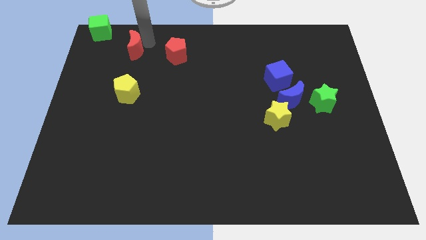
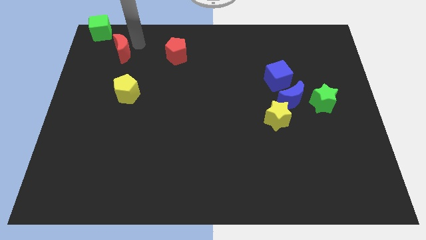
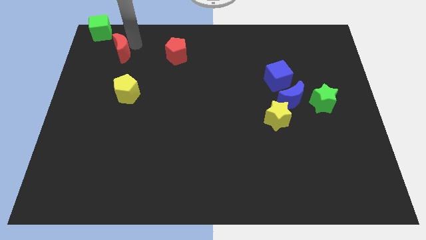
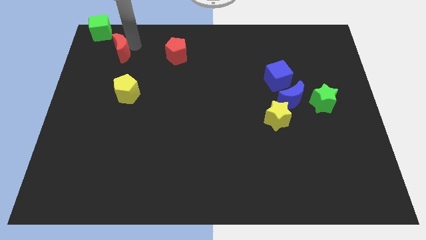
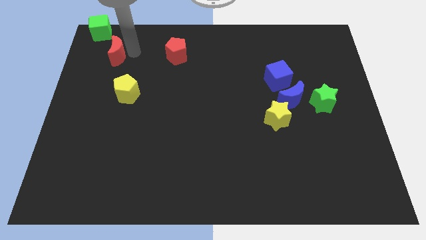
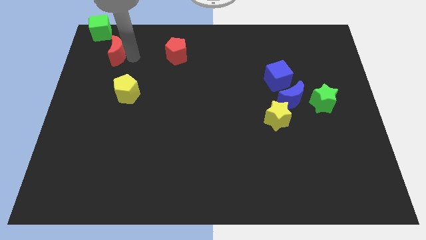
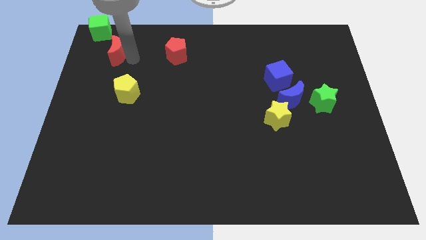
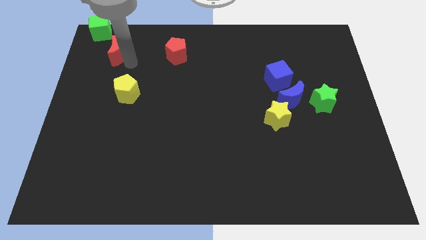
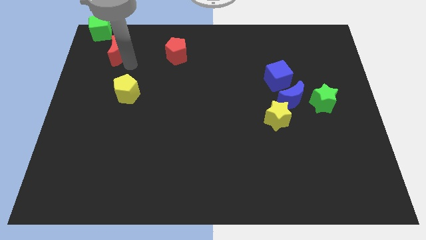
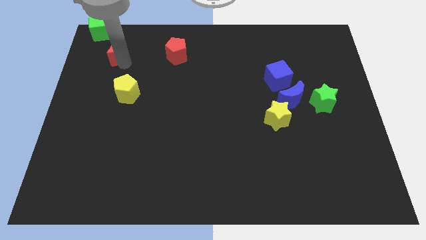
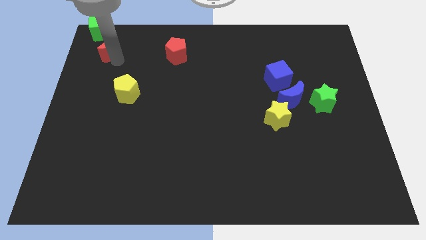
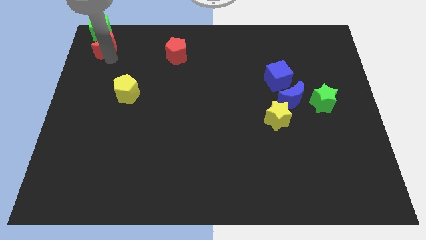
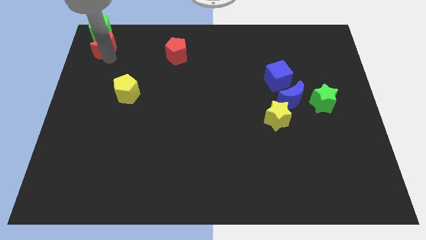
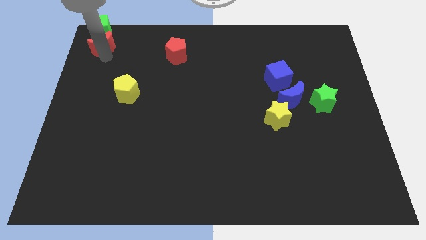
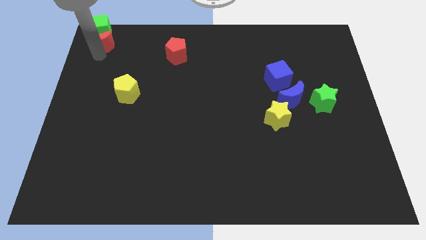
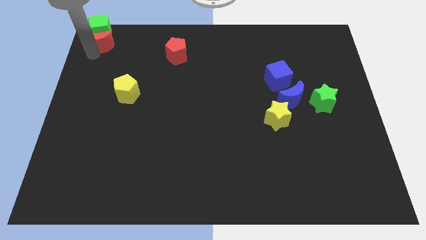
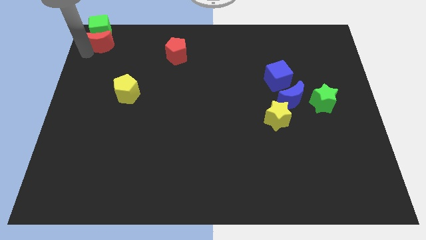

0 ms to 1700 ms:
place the red blocks at the top center

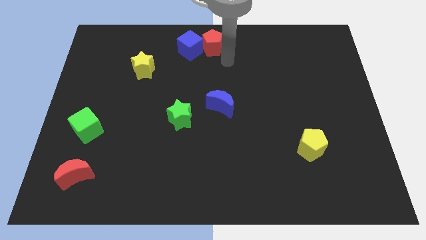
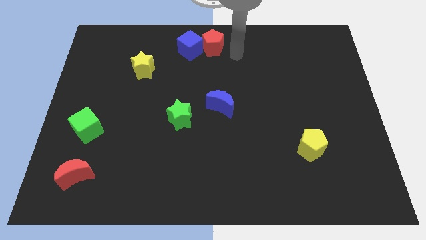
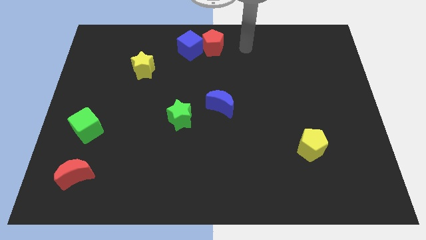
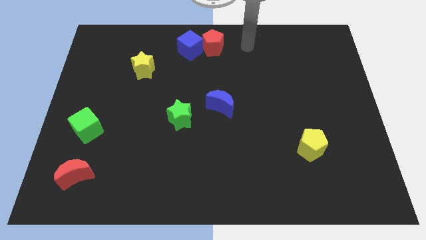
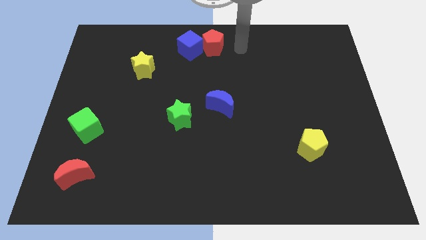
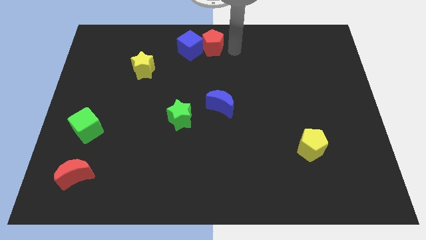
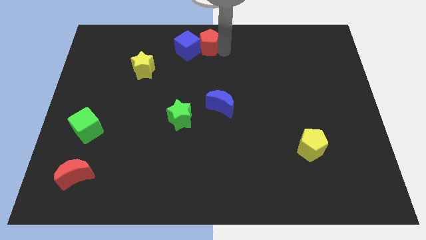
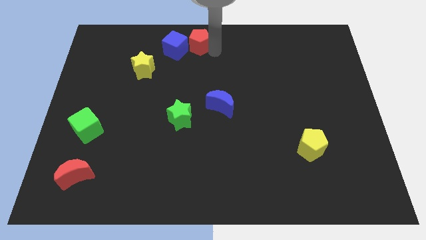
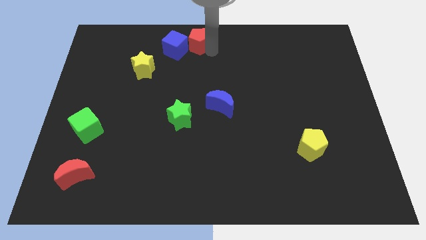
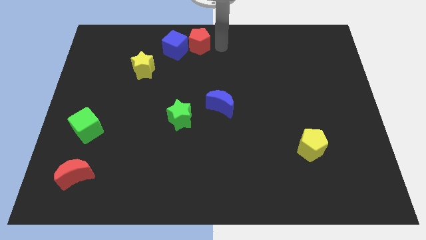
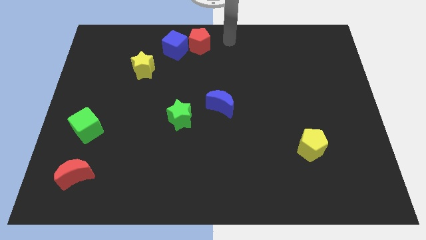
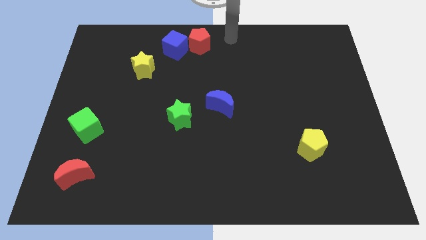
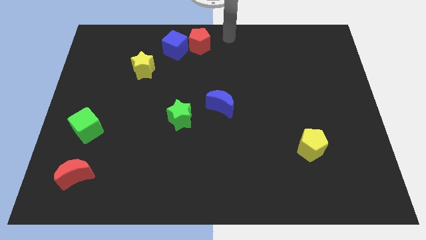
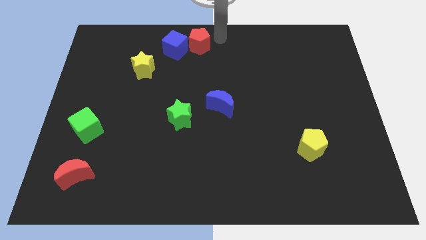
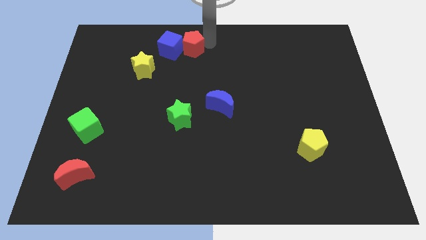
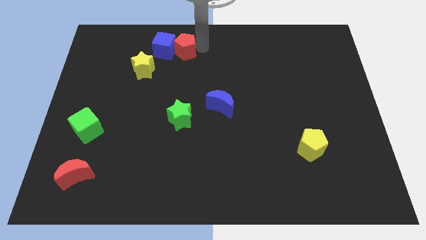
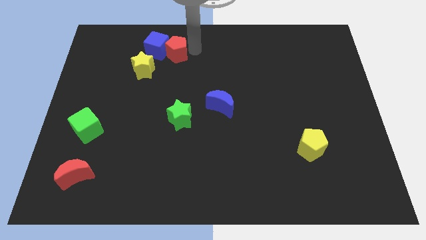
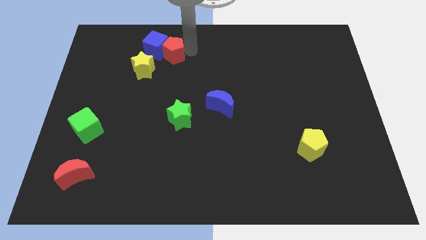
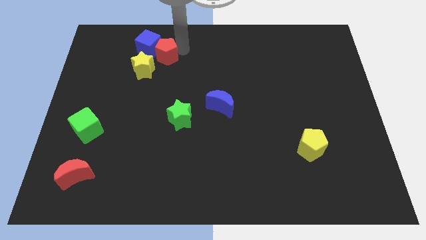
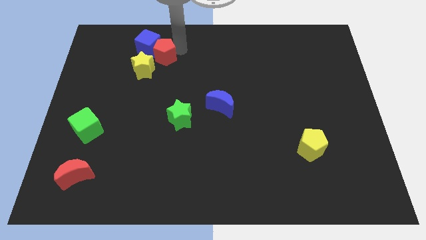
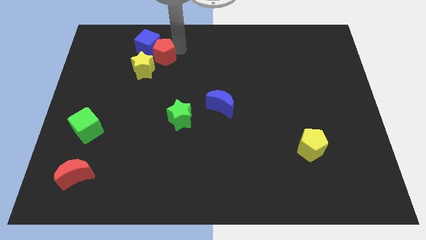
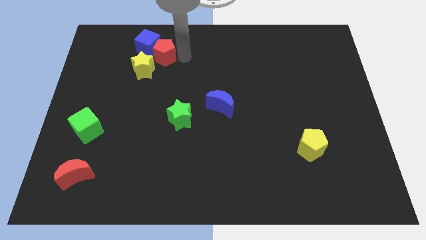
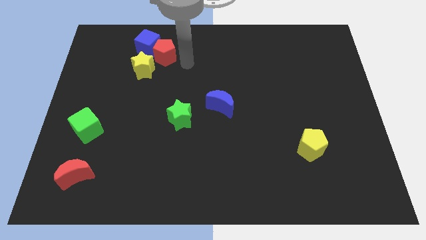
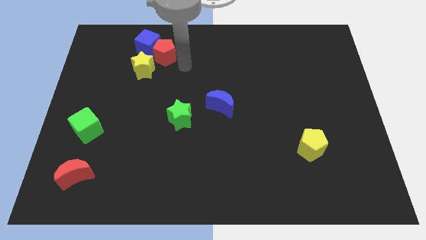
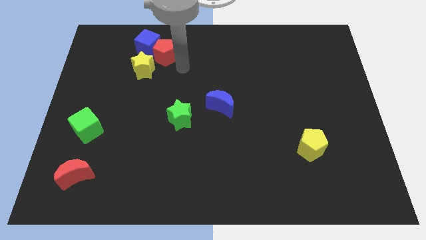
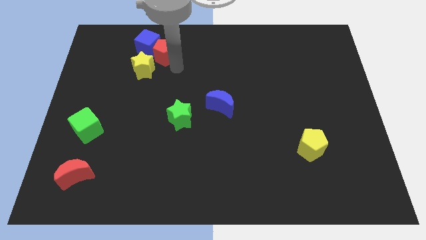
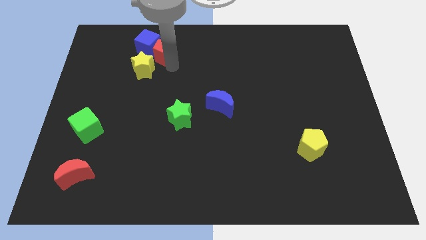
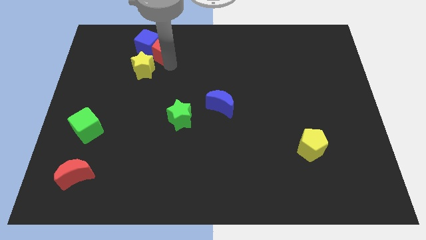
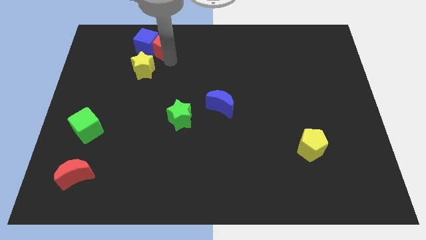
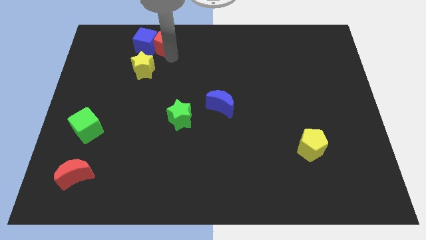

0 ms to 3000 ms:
place blue cube above yellow star

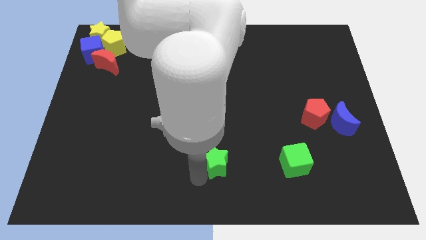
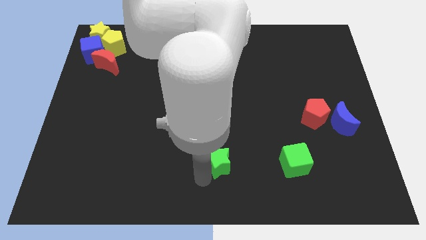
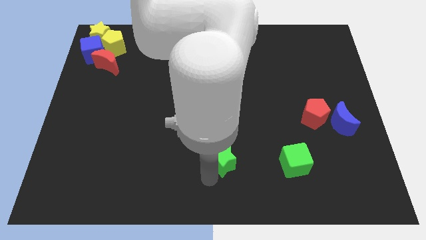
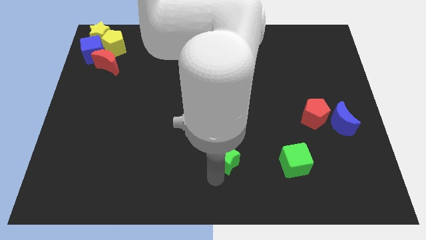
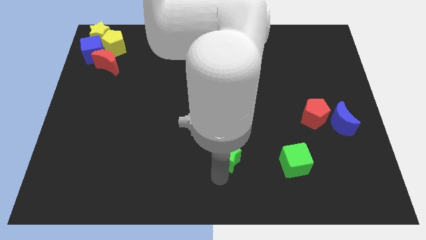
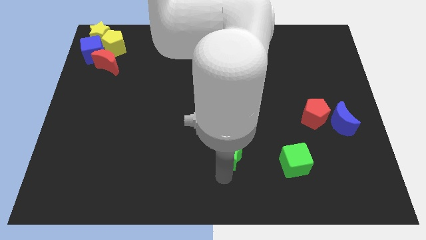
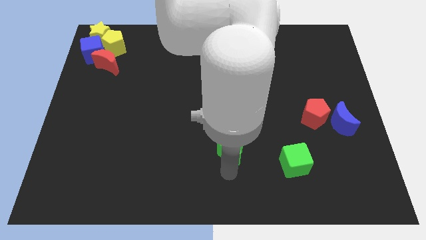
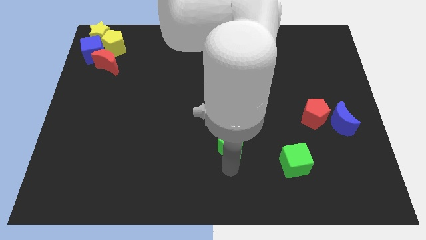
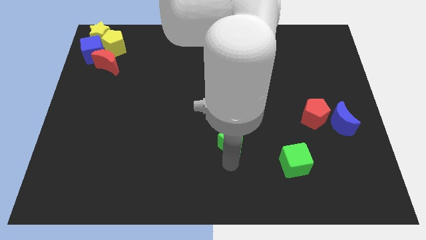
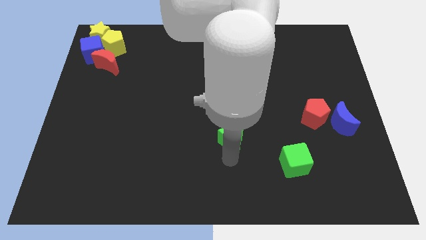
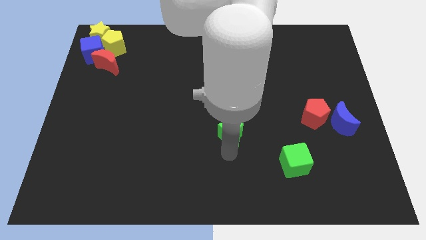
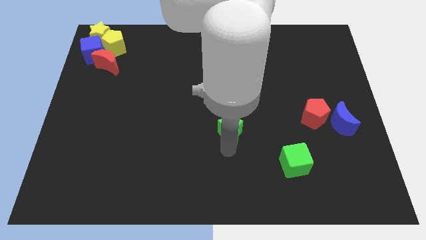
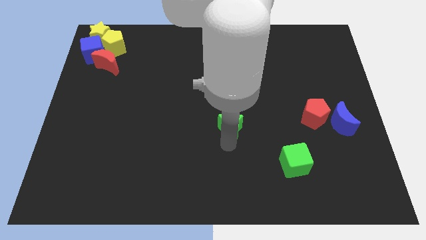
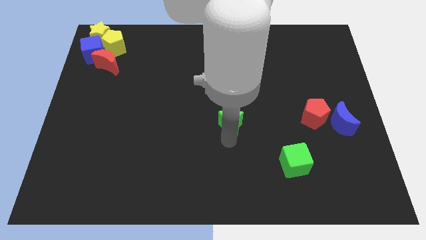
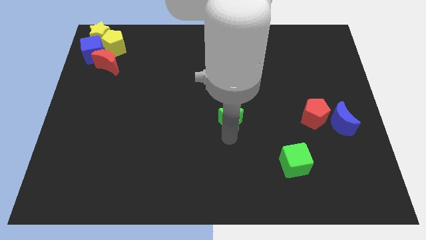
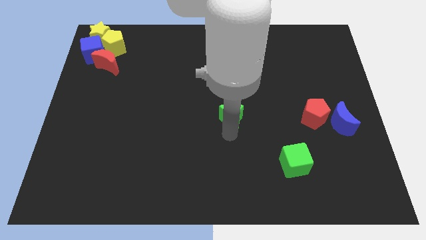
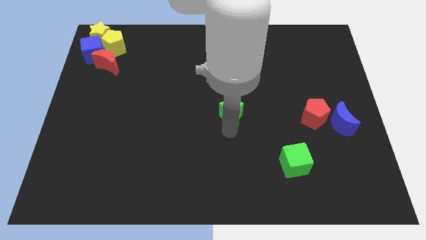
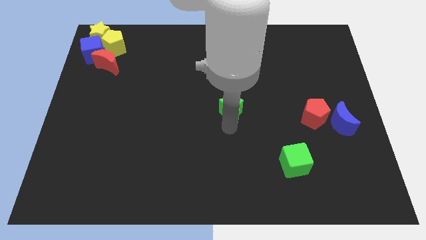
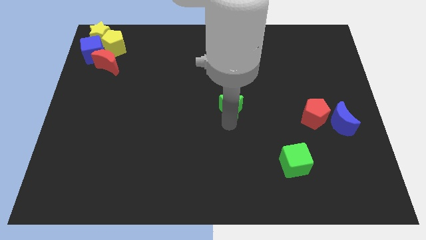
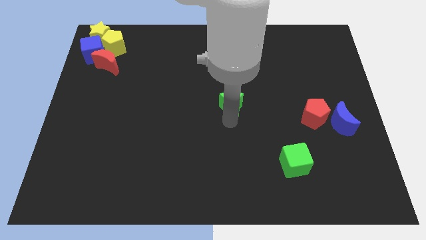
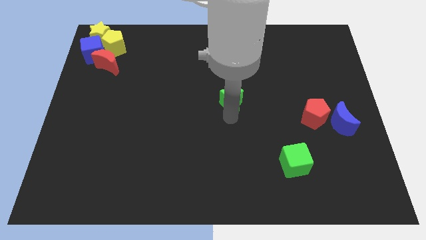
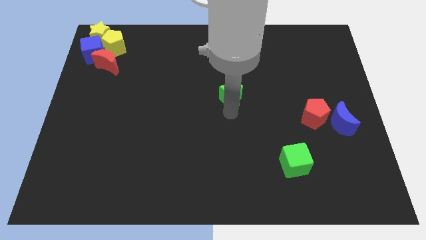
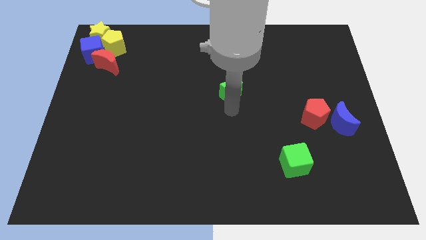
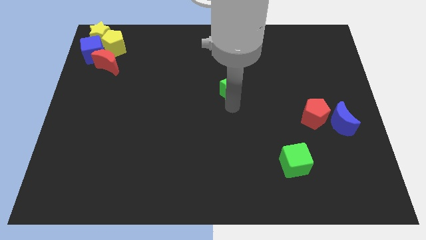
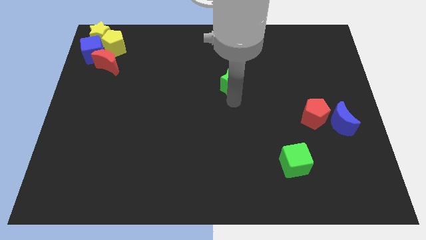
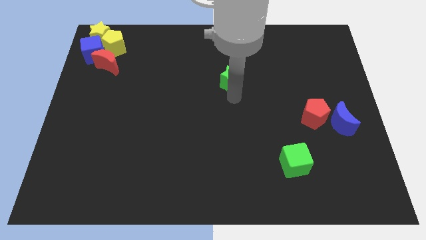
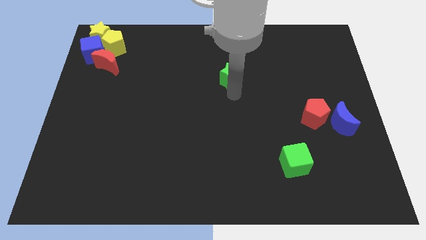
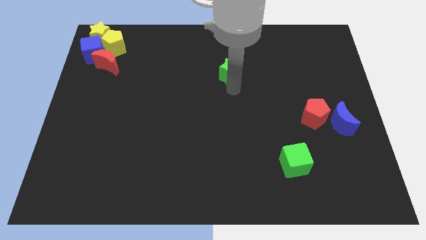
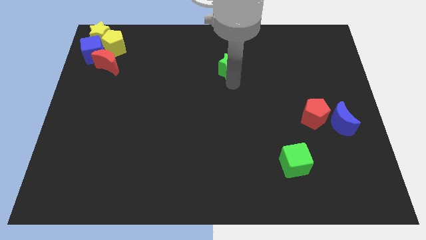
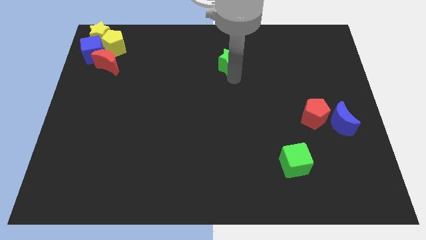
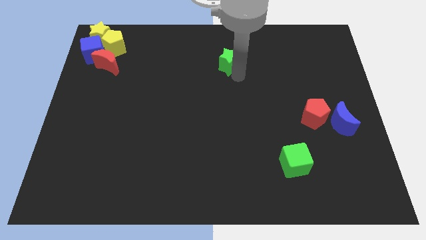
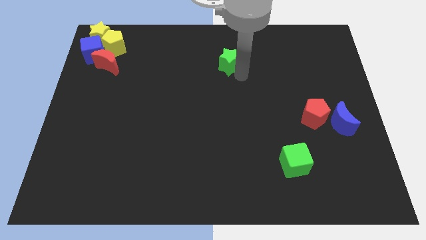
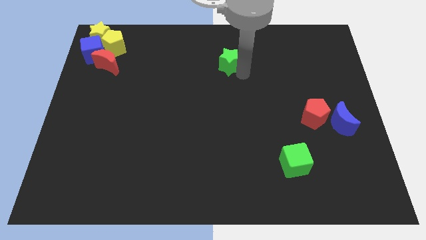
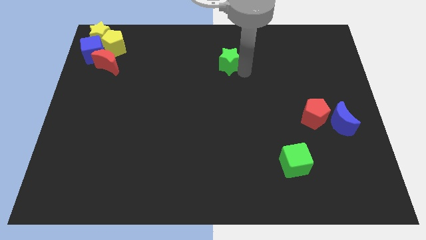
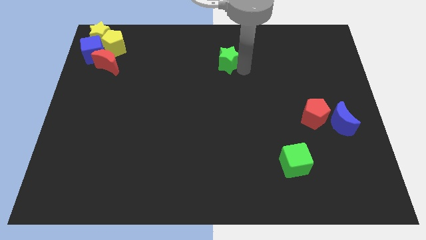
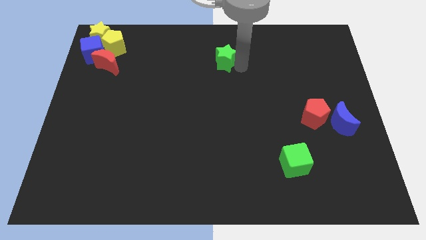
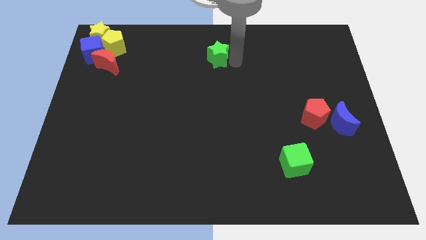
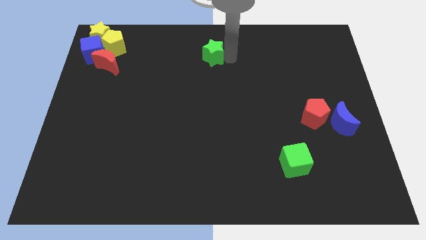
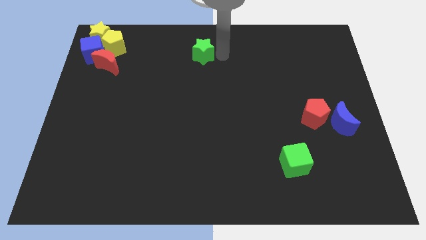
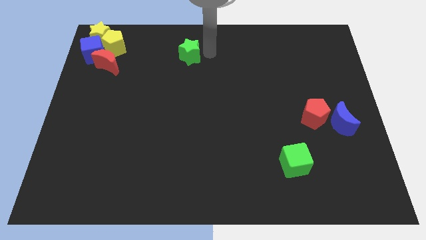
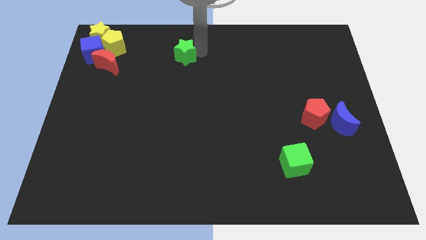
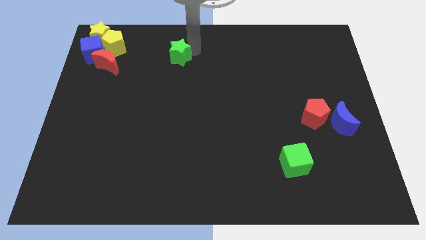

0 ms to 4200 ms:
place the green star to the top center
